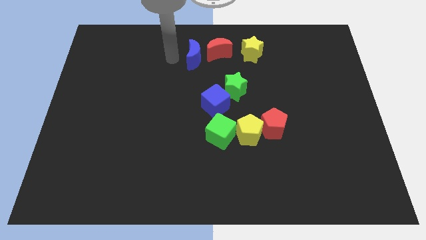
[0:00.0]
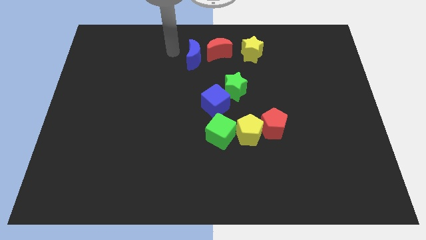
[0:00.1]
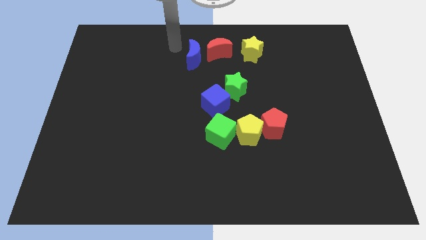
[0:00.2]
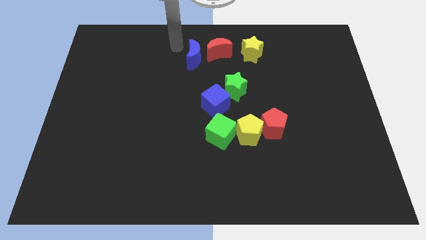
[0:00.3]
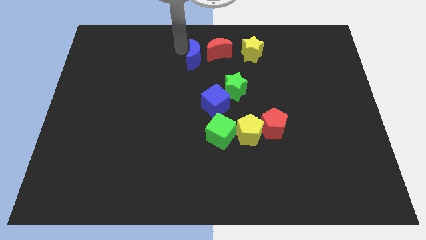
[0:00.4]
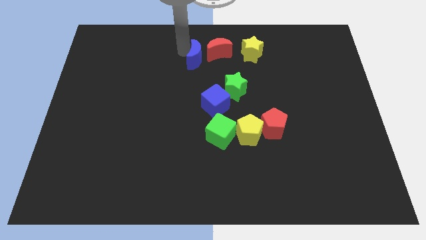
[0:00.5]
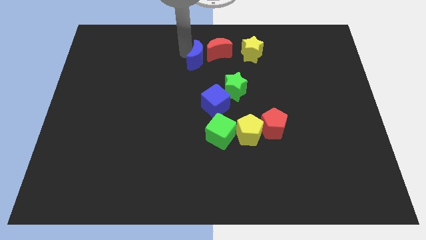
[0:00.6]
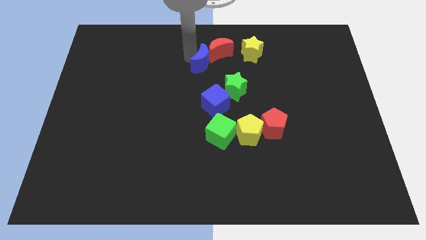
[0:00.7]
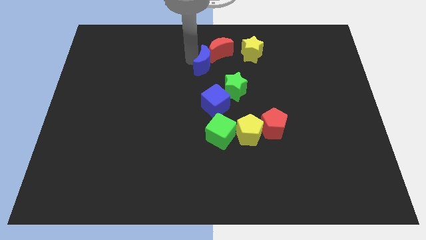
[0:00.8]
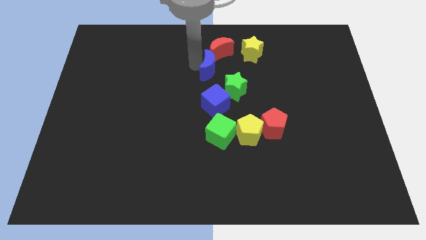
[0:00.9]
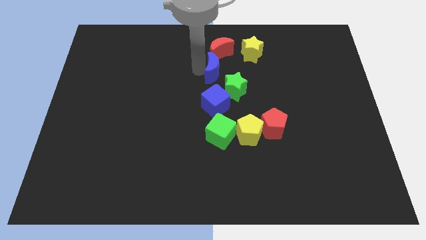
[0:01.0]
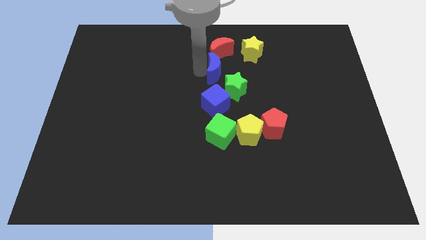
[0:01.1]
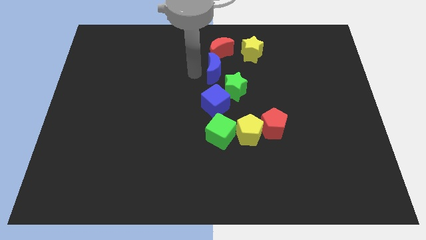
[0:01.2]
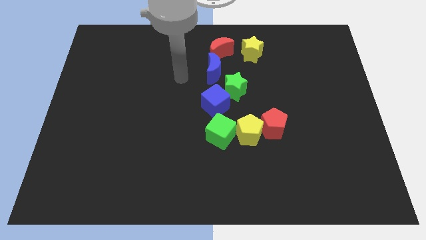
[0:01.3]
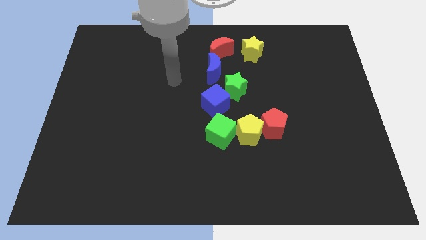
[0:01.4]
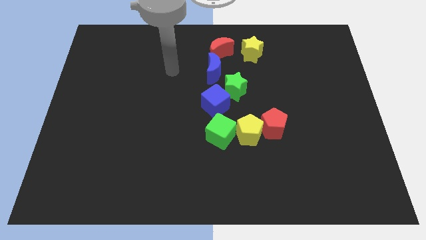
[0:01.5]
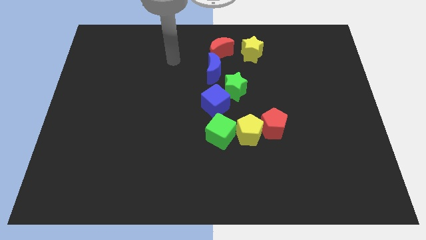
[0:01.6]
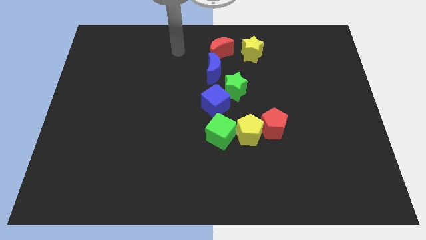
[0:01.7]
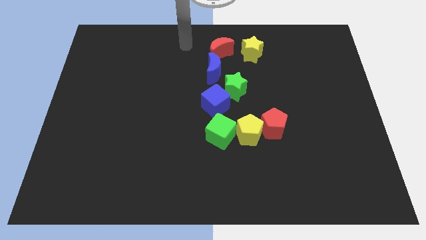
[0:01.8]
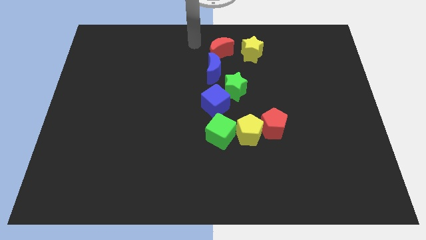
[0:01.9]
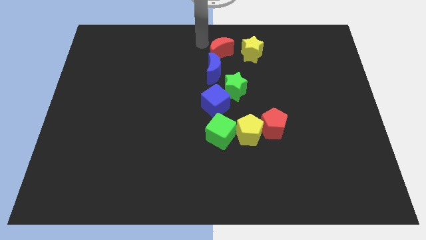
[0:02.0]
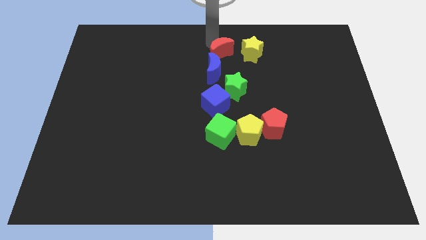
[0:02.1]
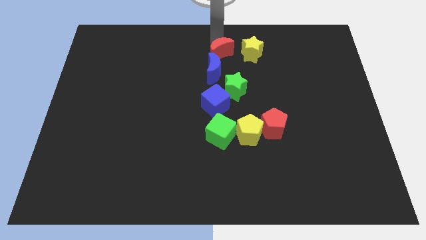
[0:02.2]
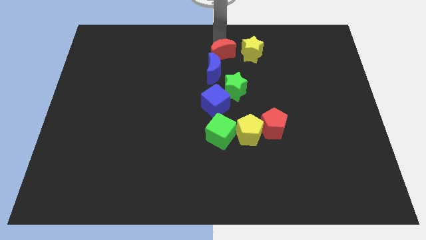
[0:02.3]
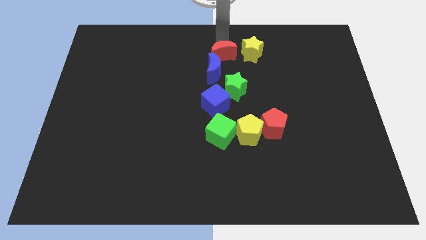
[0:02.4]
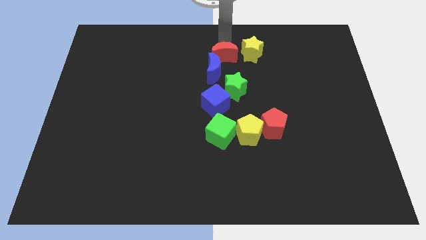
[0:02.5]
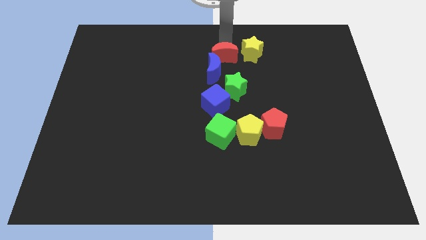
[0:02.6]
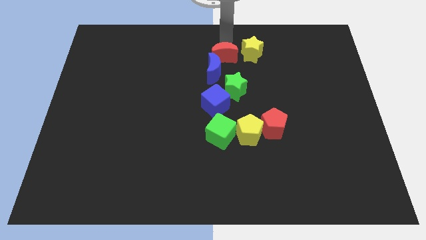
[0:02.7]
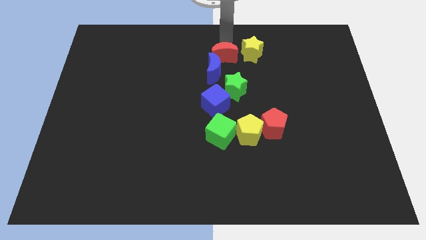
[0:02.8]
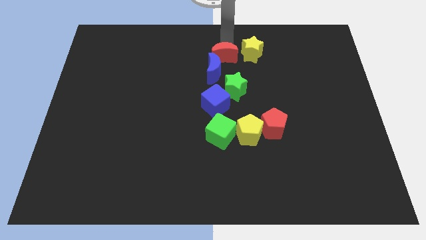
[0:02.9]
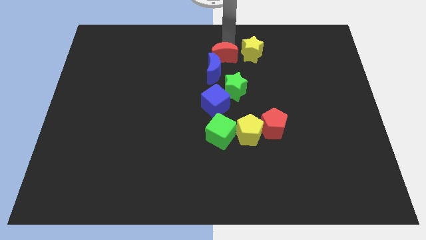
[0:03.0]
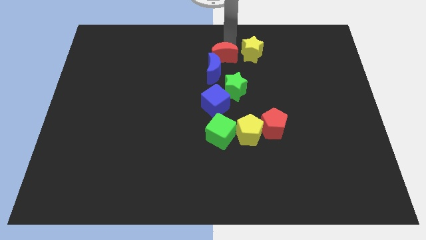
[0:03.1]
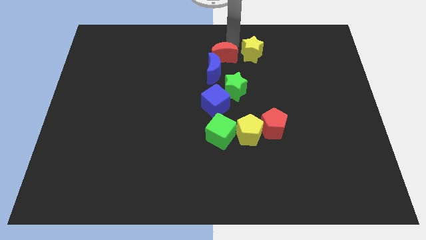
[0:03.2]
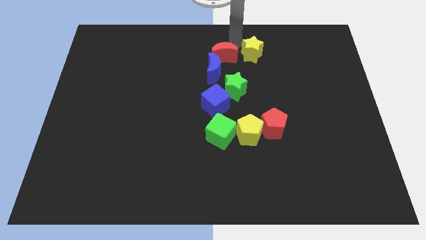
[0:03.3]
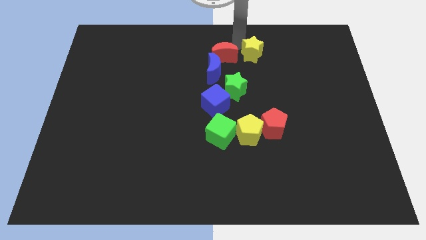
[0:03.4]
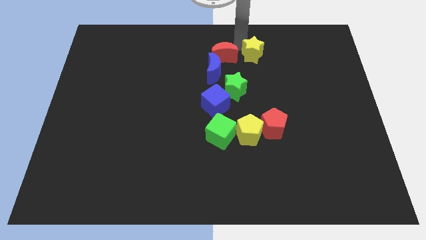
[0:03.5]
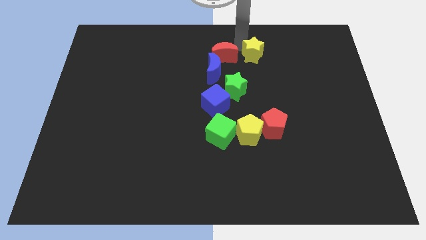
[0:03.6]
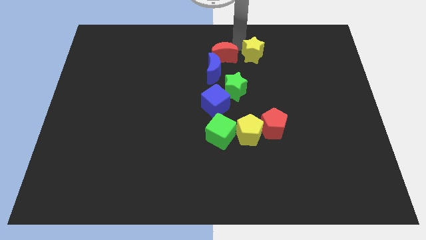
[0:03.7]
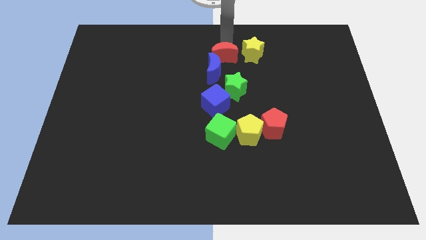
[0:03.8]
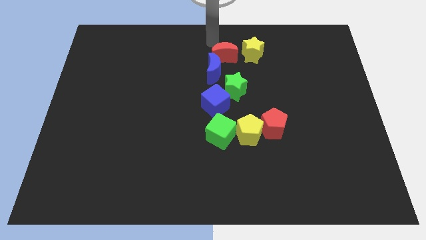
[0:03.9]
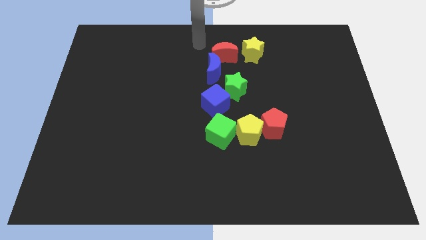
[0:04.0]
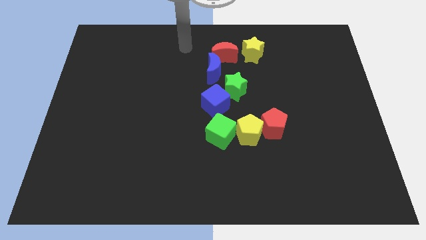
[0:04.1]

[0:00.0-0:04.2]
place the blue moon on top of blue cube

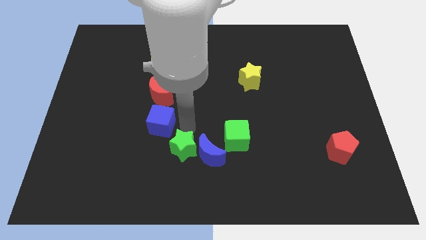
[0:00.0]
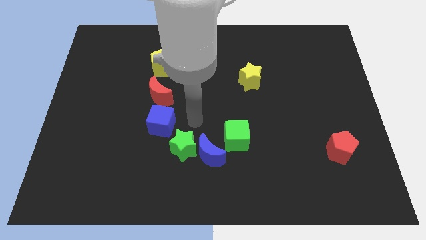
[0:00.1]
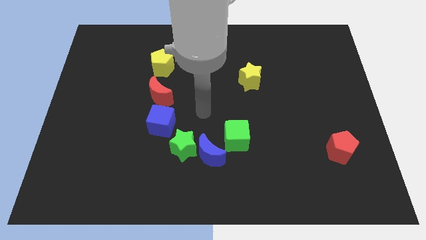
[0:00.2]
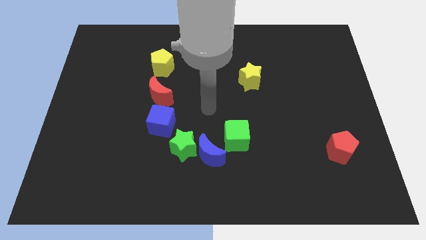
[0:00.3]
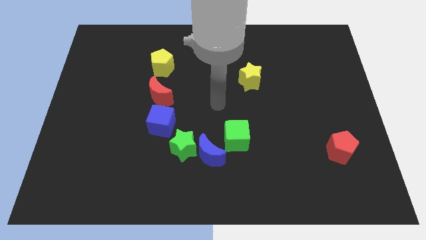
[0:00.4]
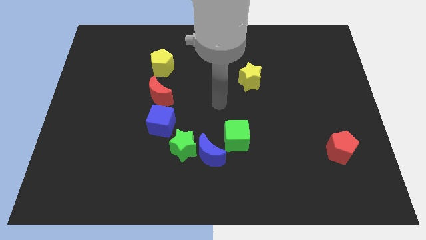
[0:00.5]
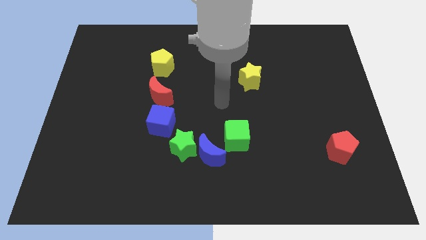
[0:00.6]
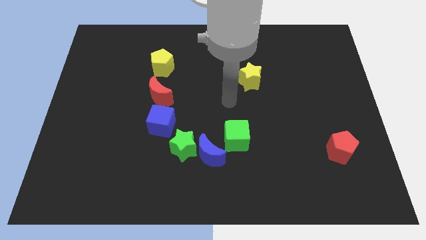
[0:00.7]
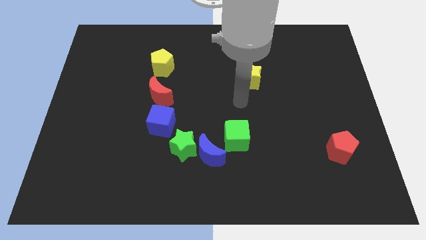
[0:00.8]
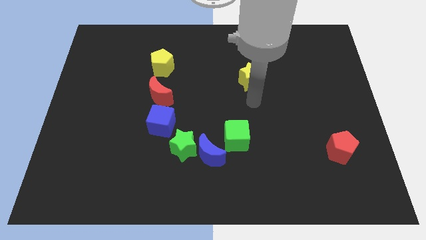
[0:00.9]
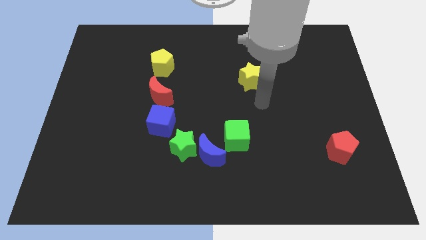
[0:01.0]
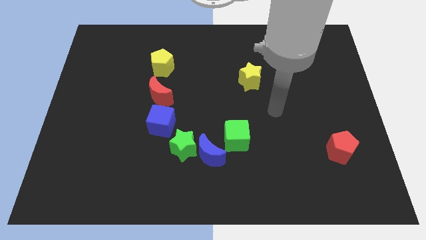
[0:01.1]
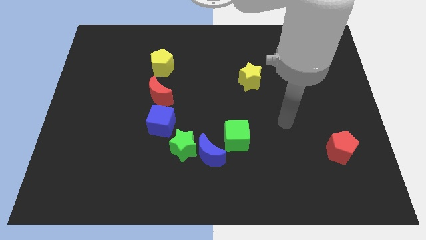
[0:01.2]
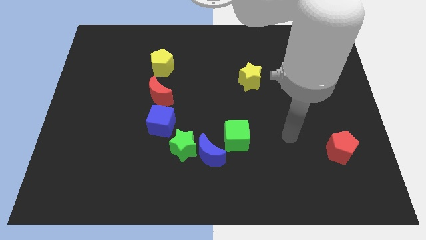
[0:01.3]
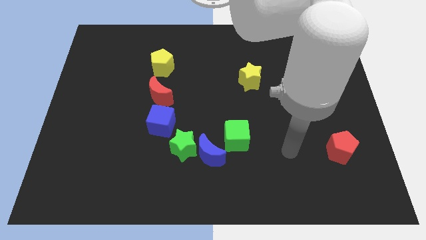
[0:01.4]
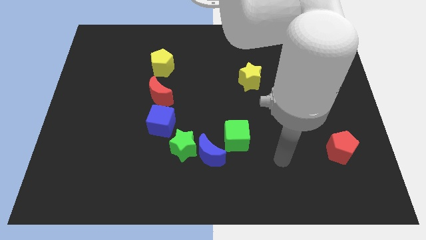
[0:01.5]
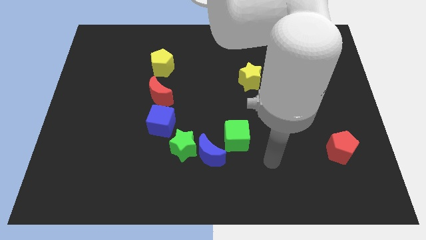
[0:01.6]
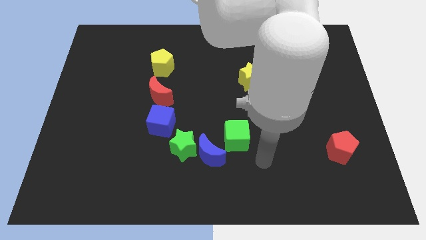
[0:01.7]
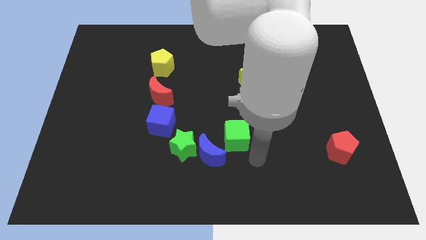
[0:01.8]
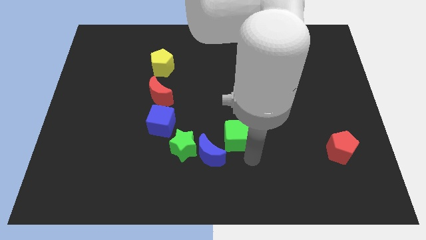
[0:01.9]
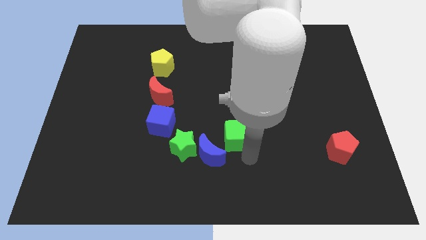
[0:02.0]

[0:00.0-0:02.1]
point your arm at the bottom of the green cube

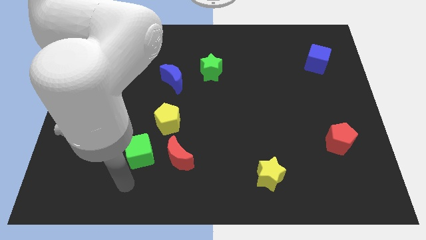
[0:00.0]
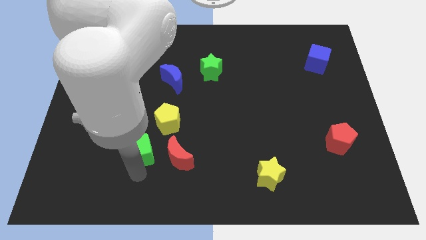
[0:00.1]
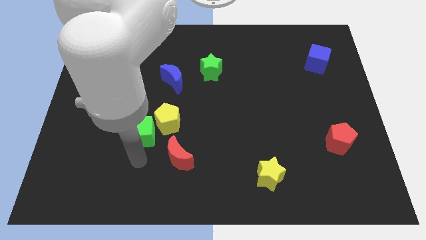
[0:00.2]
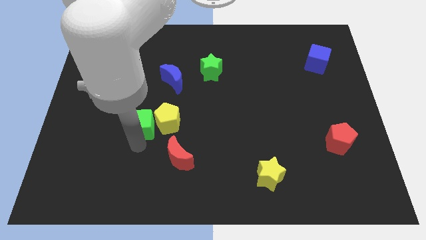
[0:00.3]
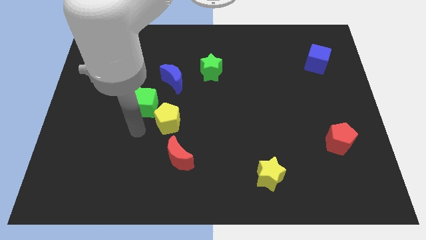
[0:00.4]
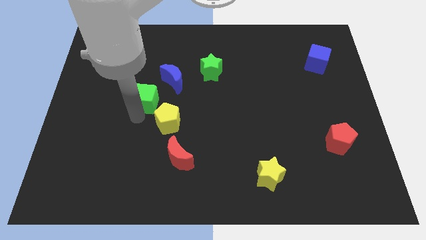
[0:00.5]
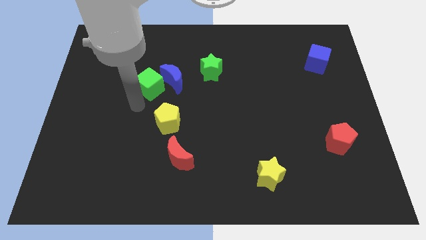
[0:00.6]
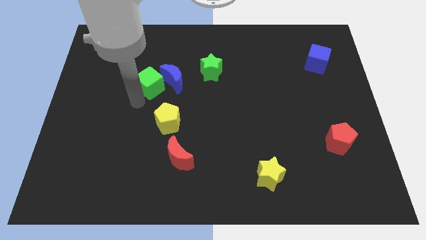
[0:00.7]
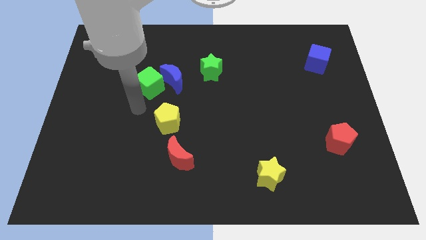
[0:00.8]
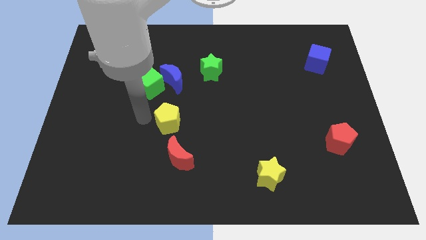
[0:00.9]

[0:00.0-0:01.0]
push the green block near to the crescent

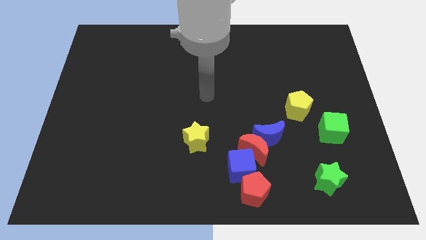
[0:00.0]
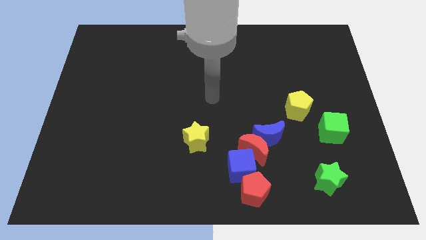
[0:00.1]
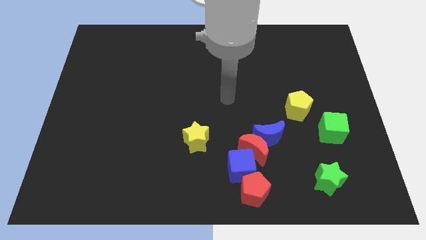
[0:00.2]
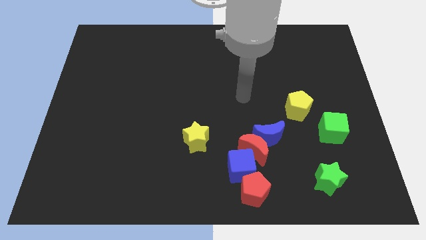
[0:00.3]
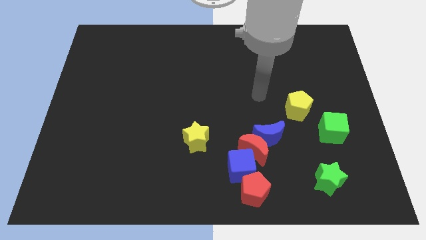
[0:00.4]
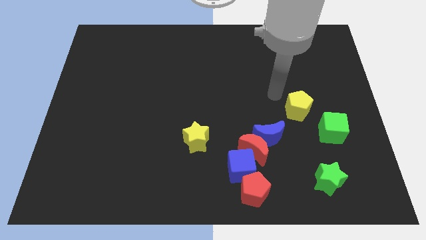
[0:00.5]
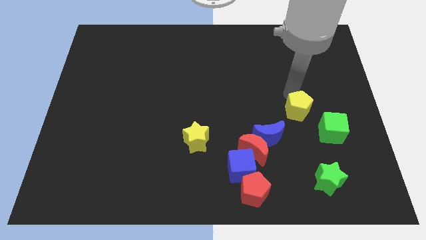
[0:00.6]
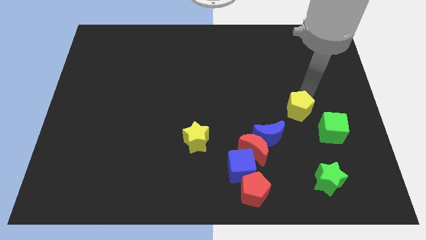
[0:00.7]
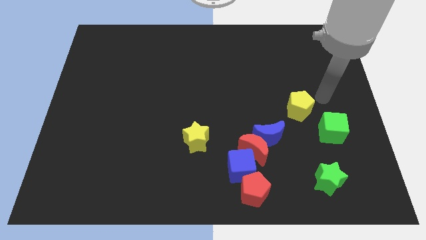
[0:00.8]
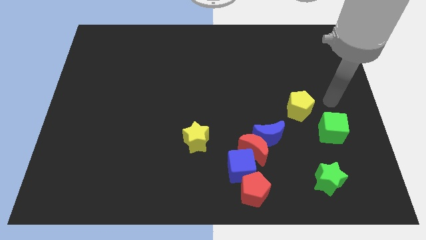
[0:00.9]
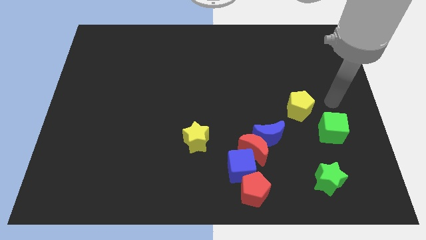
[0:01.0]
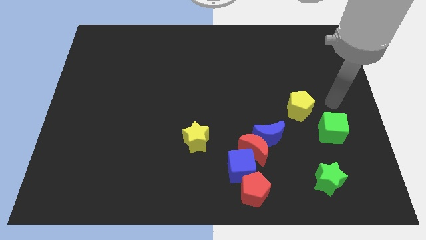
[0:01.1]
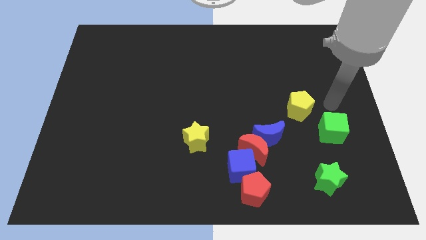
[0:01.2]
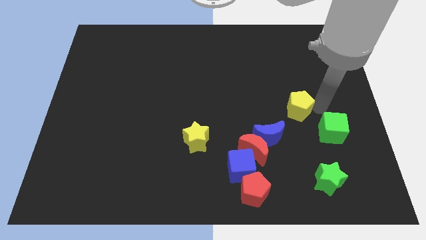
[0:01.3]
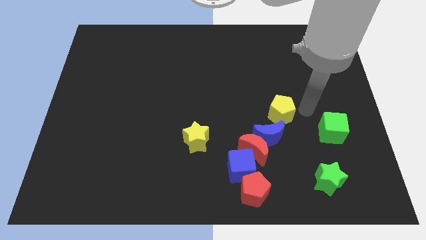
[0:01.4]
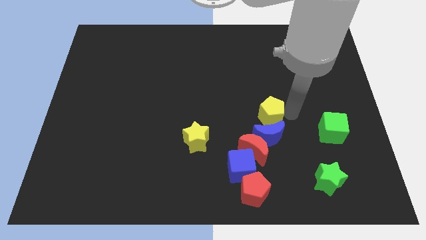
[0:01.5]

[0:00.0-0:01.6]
place the yellow pentagon above the blue crescent

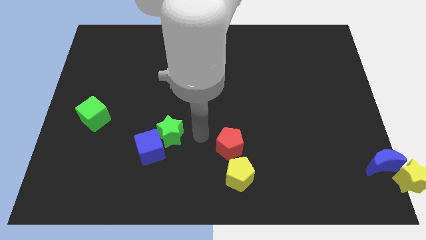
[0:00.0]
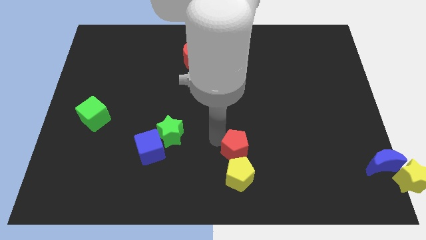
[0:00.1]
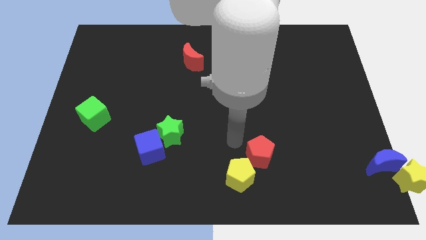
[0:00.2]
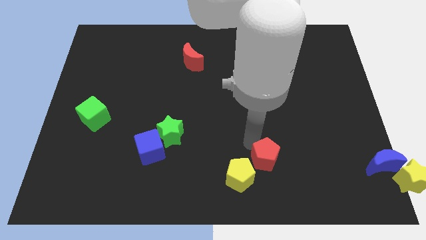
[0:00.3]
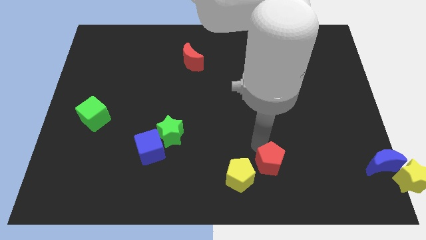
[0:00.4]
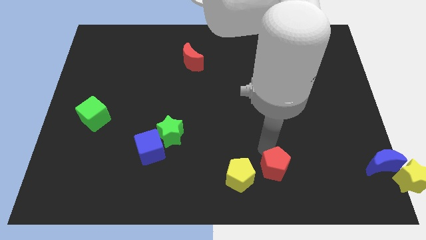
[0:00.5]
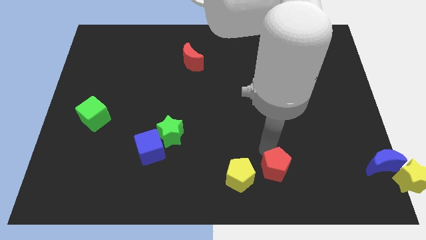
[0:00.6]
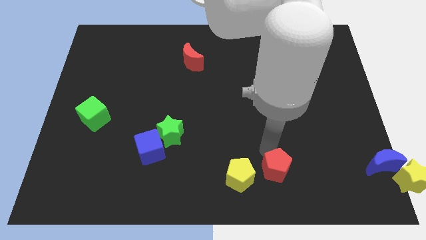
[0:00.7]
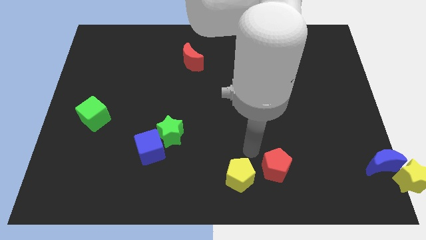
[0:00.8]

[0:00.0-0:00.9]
push the red pentagon to the right of the yellow pentagon
